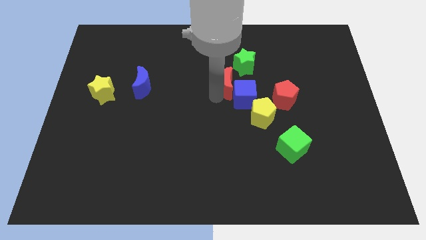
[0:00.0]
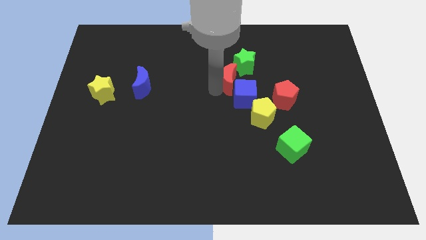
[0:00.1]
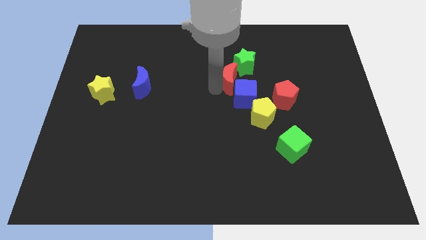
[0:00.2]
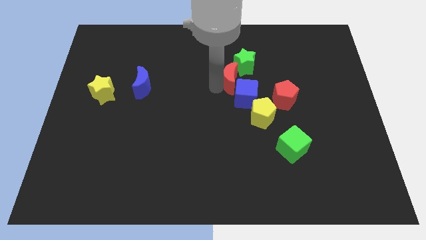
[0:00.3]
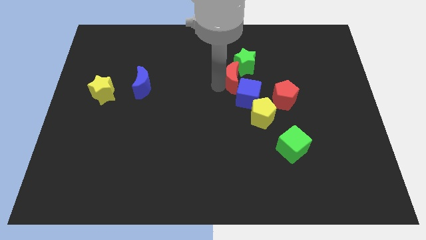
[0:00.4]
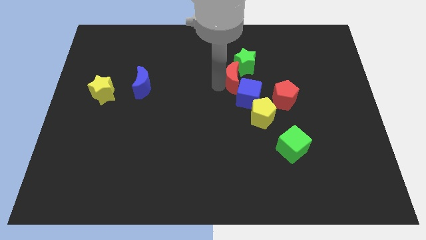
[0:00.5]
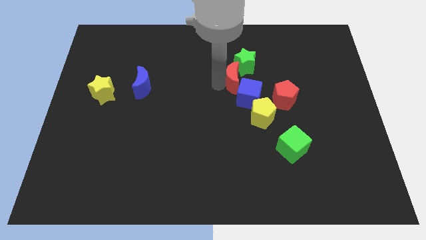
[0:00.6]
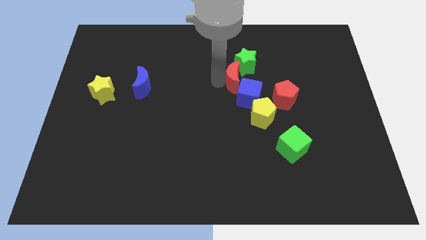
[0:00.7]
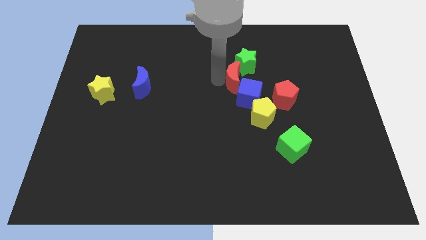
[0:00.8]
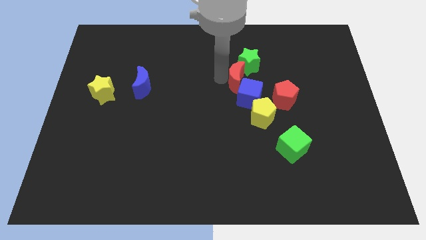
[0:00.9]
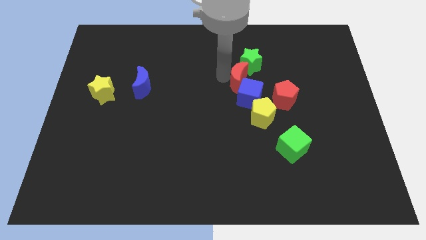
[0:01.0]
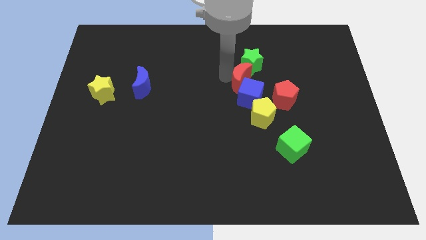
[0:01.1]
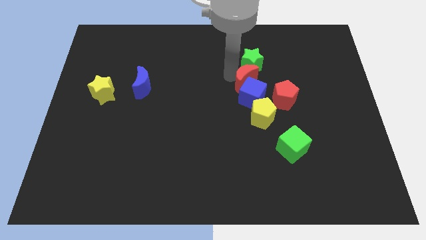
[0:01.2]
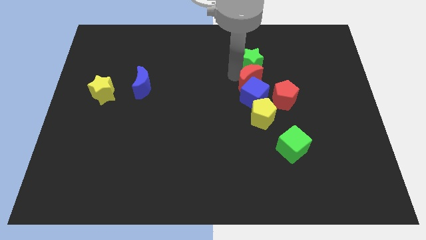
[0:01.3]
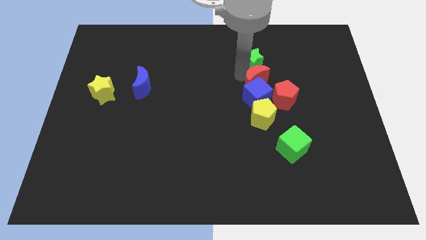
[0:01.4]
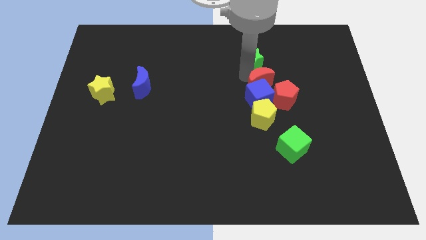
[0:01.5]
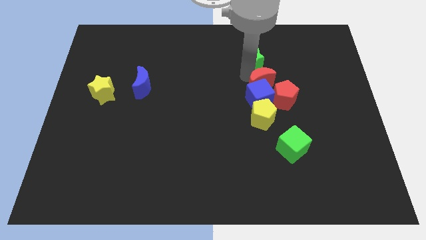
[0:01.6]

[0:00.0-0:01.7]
place the red moon between the blue cube and the green star

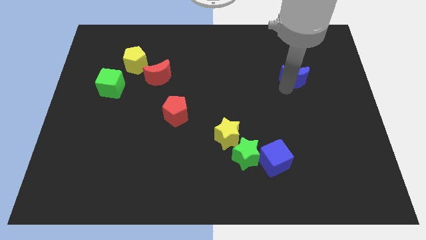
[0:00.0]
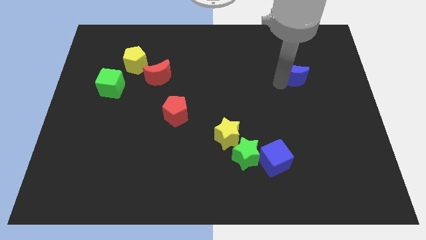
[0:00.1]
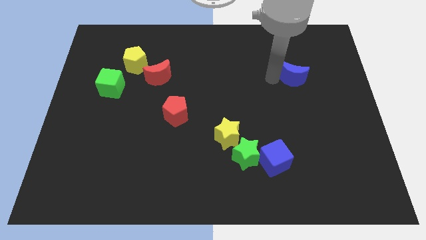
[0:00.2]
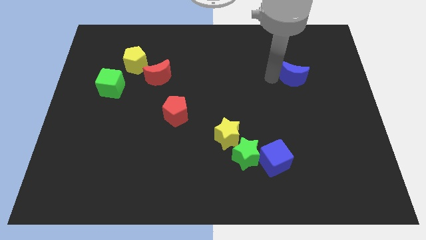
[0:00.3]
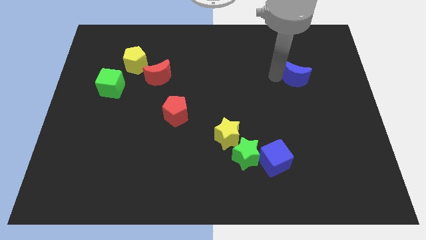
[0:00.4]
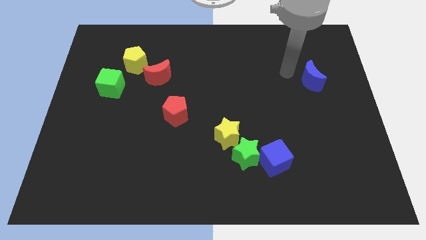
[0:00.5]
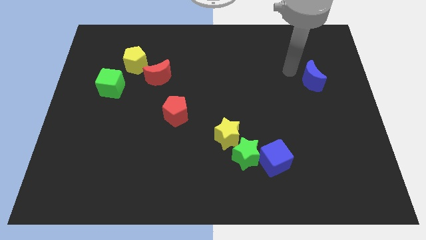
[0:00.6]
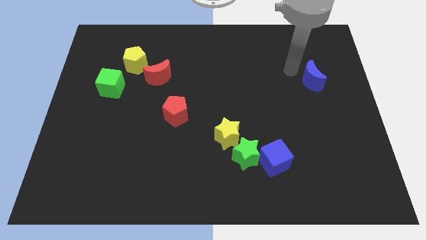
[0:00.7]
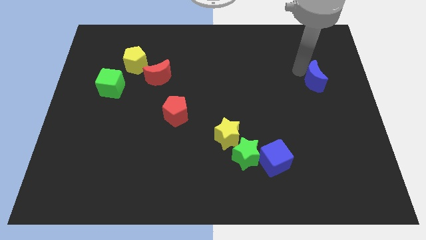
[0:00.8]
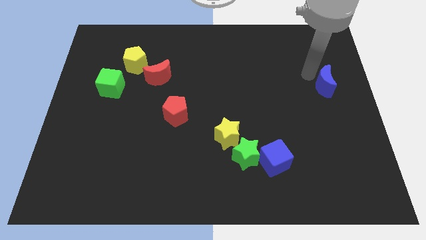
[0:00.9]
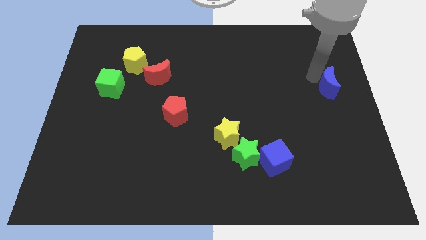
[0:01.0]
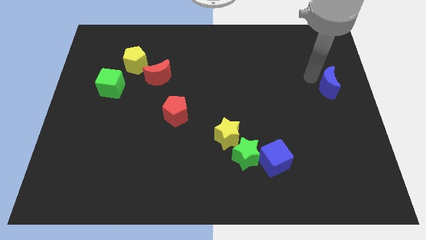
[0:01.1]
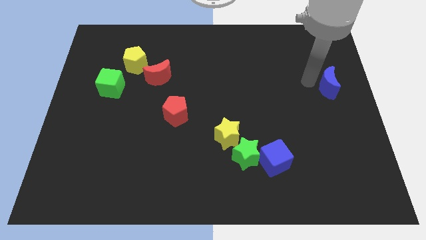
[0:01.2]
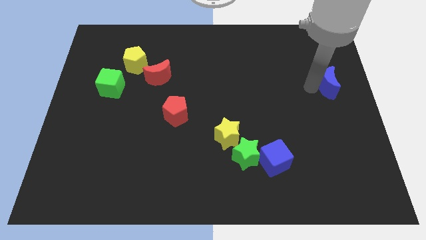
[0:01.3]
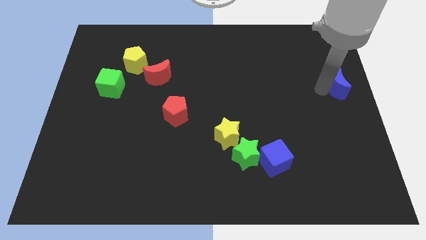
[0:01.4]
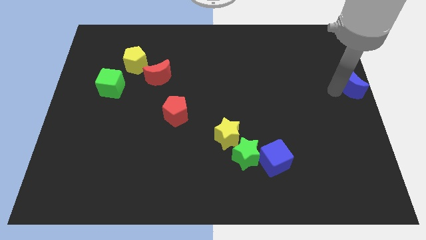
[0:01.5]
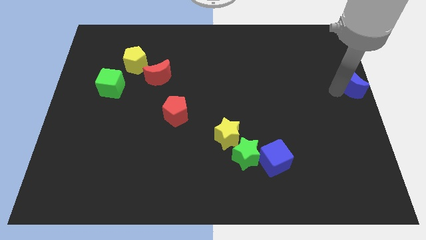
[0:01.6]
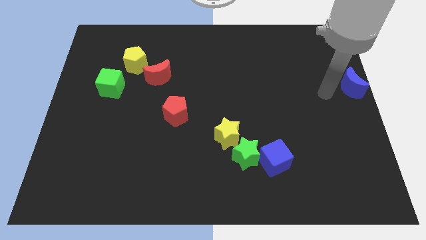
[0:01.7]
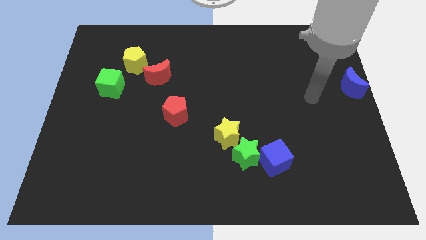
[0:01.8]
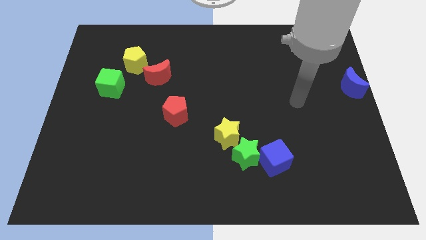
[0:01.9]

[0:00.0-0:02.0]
move the blue crescent to the right of the board

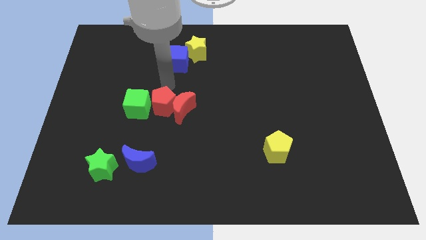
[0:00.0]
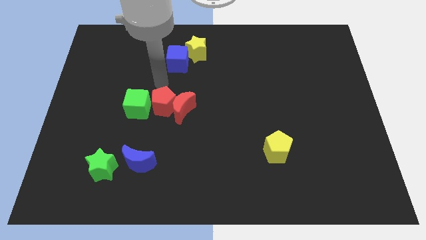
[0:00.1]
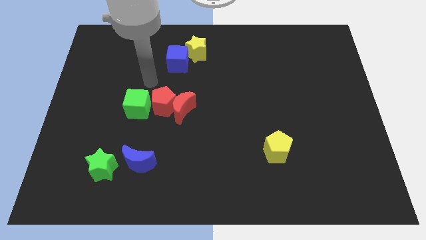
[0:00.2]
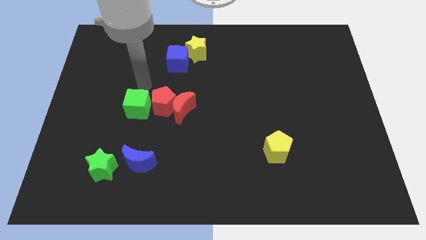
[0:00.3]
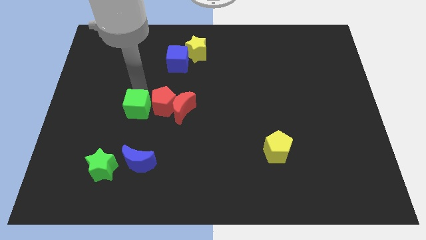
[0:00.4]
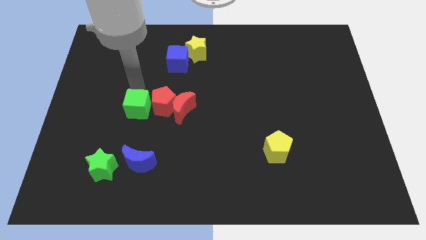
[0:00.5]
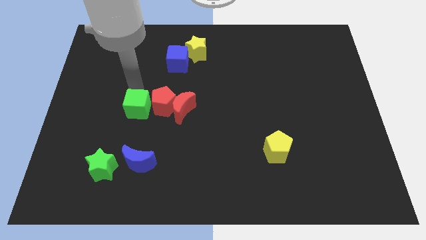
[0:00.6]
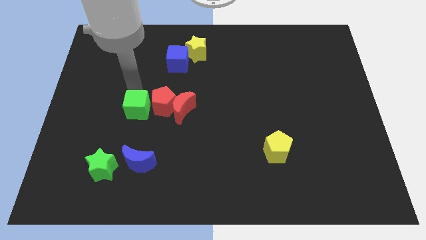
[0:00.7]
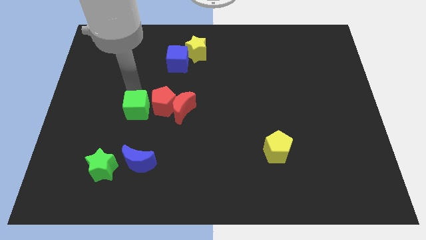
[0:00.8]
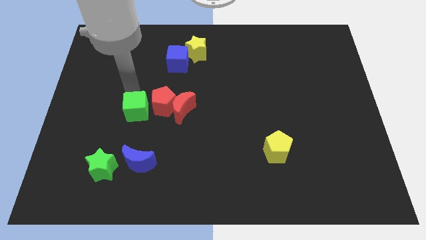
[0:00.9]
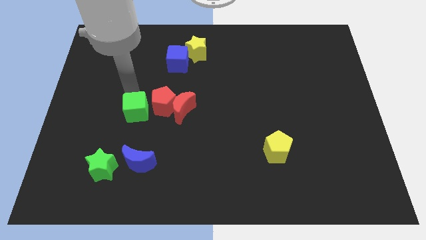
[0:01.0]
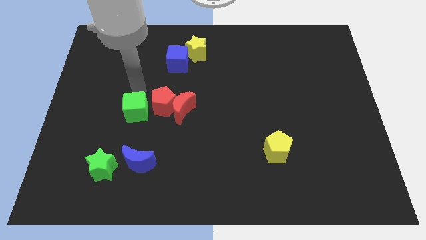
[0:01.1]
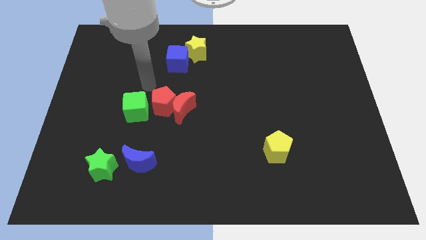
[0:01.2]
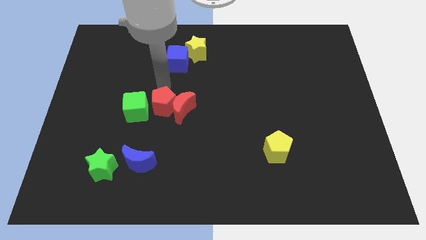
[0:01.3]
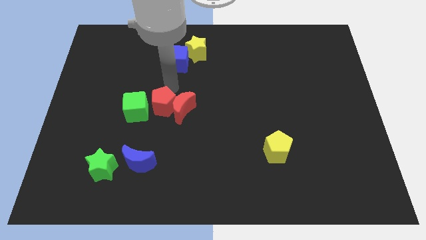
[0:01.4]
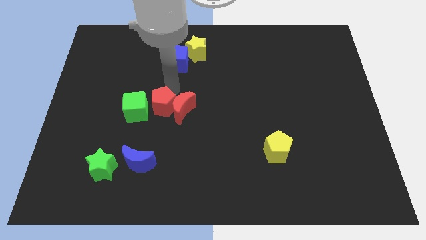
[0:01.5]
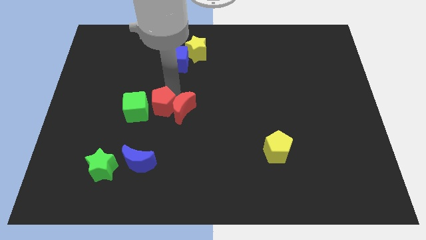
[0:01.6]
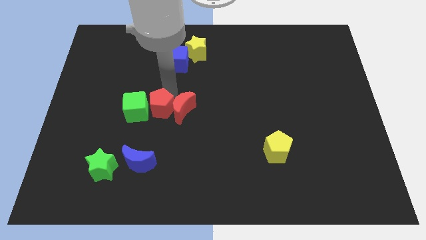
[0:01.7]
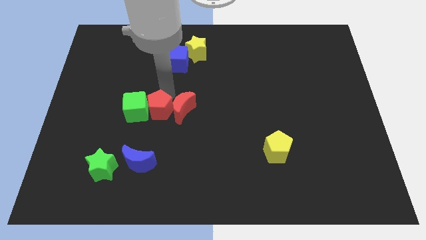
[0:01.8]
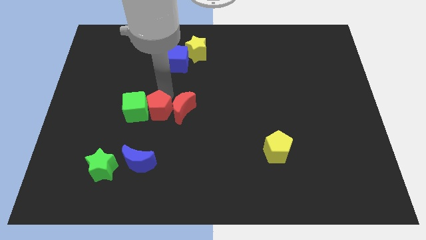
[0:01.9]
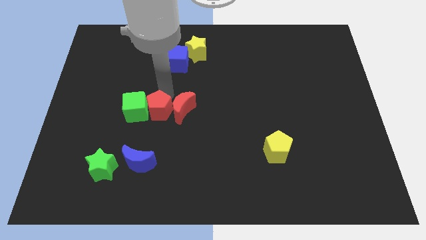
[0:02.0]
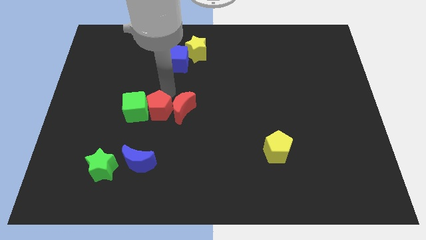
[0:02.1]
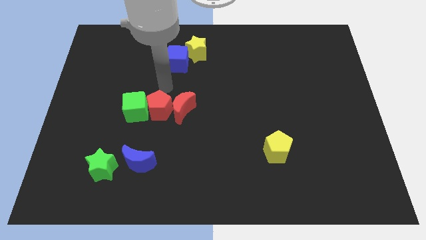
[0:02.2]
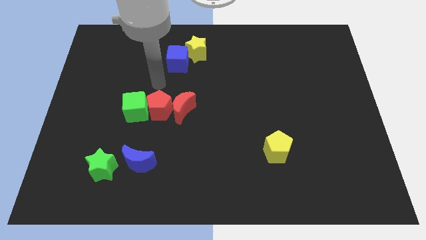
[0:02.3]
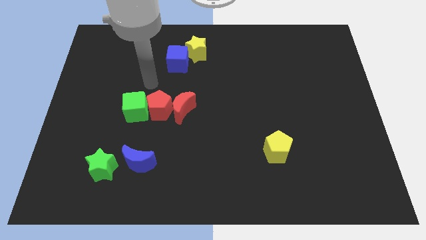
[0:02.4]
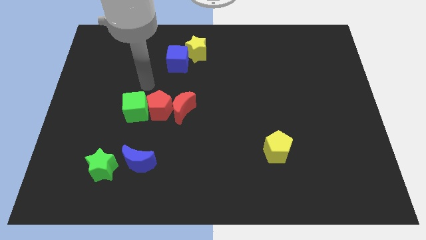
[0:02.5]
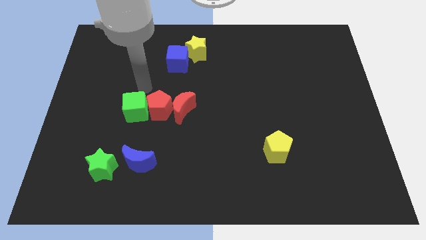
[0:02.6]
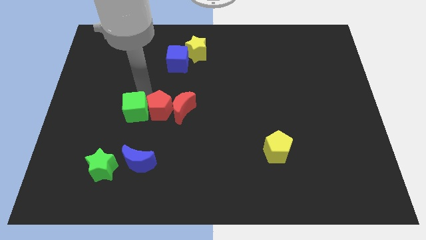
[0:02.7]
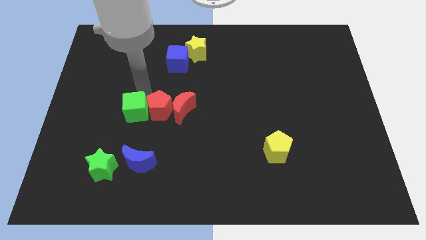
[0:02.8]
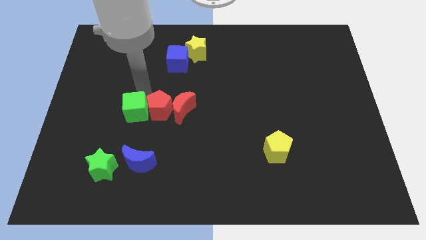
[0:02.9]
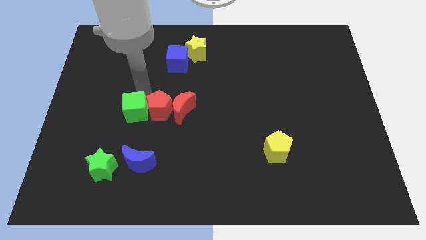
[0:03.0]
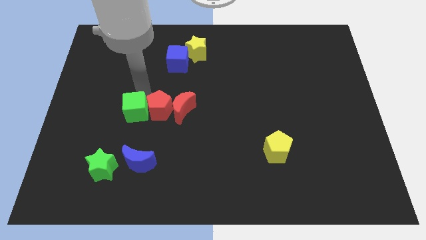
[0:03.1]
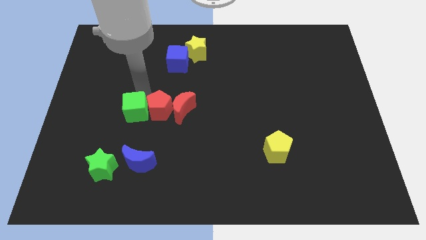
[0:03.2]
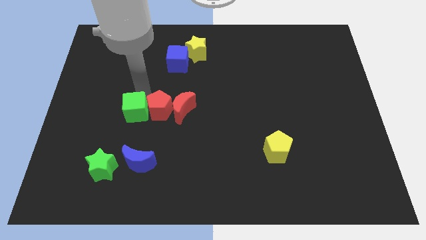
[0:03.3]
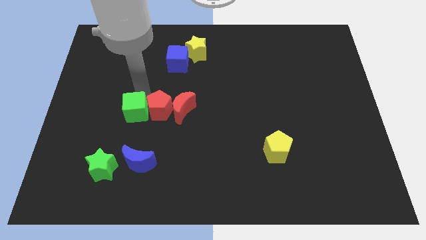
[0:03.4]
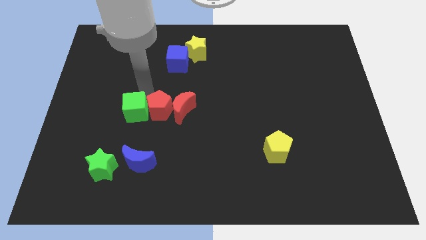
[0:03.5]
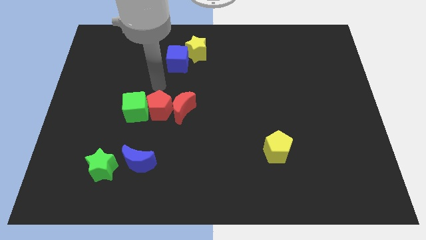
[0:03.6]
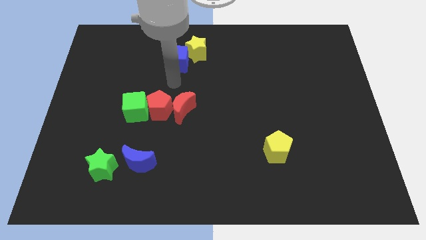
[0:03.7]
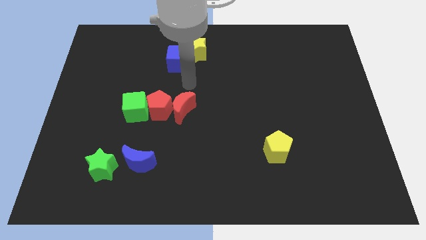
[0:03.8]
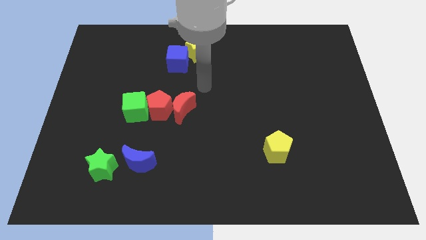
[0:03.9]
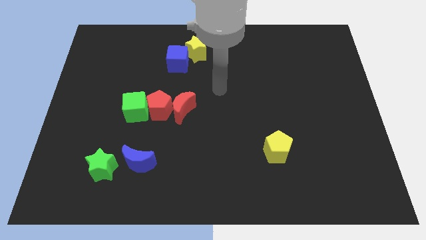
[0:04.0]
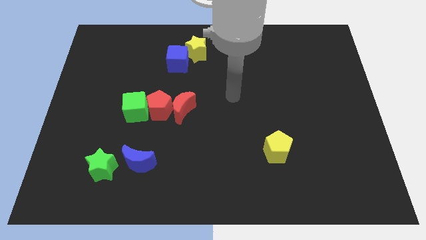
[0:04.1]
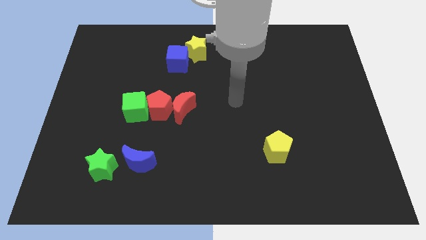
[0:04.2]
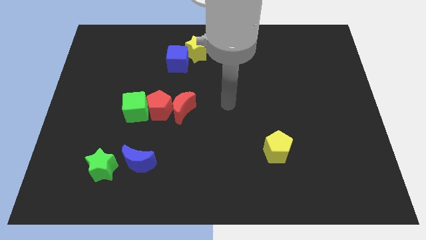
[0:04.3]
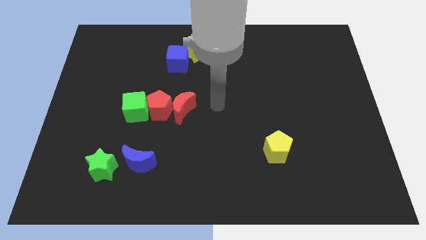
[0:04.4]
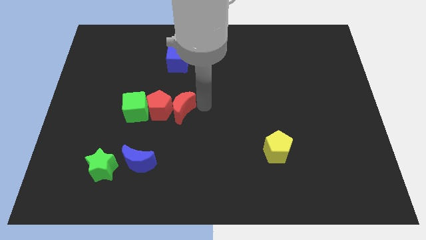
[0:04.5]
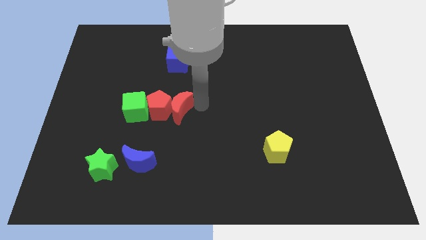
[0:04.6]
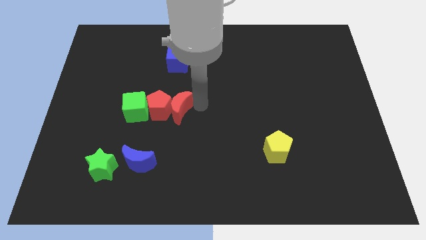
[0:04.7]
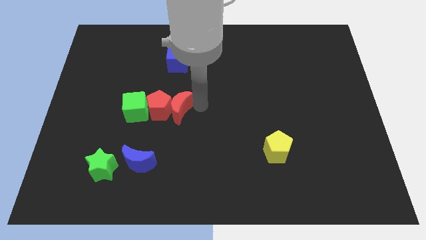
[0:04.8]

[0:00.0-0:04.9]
adjust the horizontal line of blocks at the left side of the board

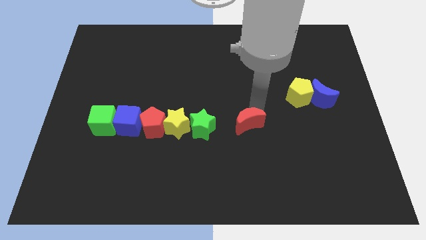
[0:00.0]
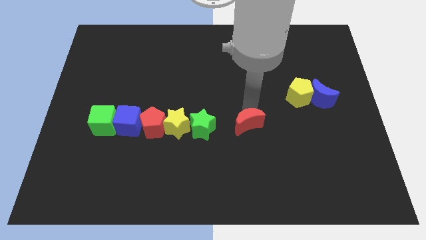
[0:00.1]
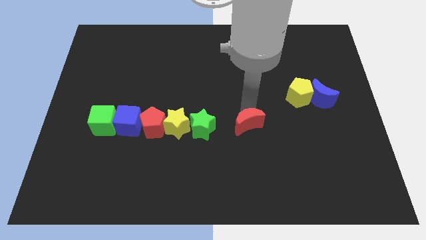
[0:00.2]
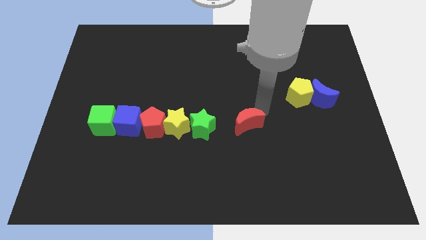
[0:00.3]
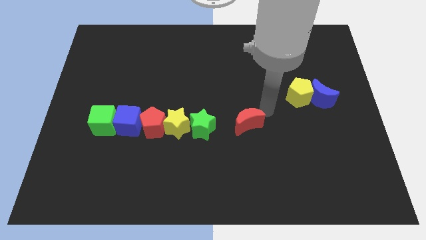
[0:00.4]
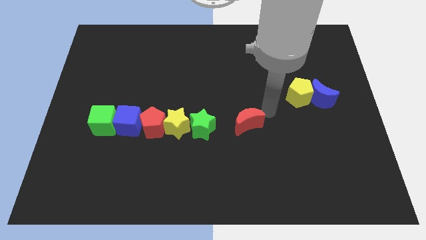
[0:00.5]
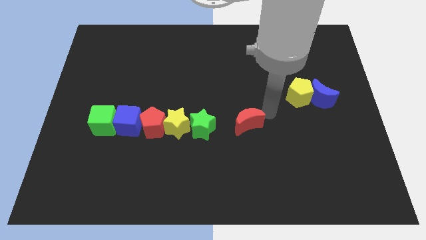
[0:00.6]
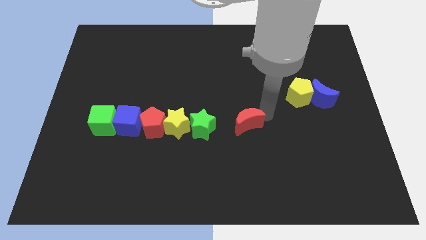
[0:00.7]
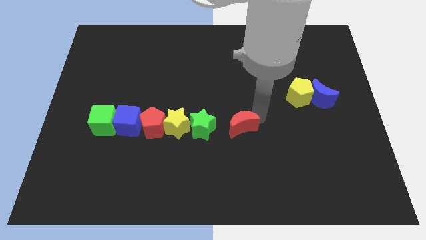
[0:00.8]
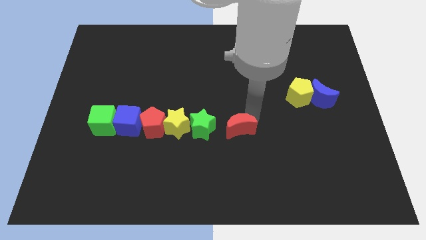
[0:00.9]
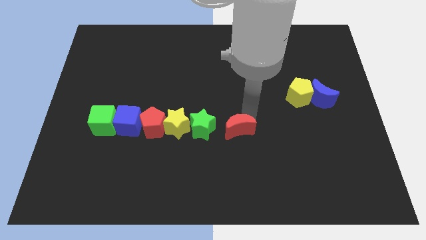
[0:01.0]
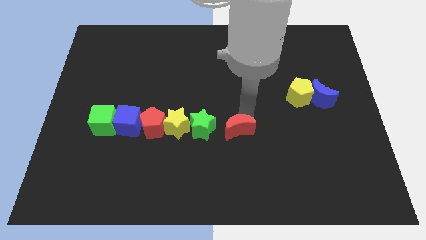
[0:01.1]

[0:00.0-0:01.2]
push the red crescent to the right of the green star
